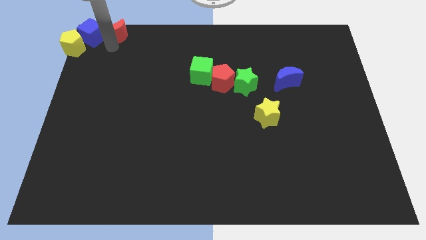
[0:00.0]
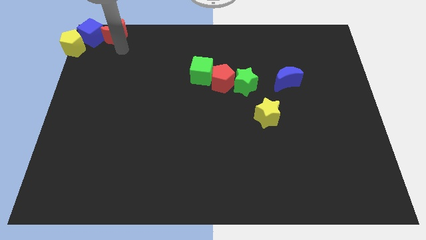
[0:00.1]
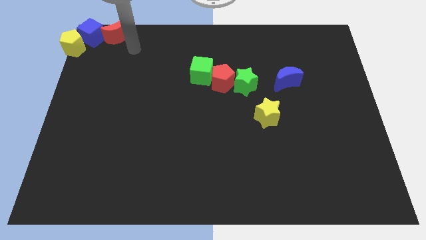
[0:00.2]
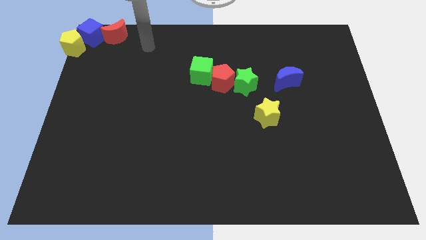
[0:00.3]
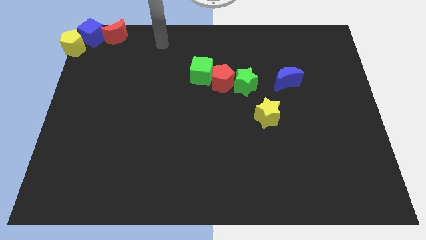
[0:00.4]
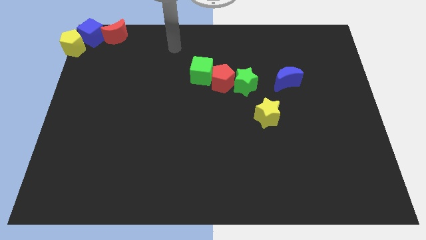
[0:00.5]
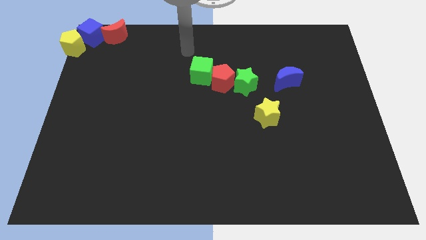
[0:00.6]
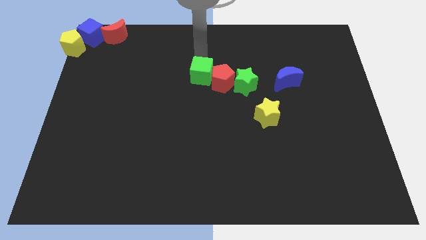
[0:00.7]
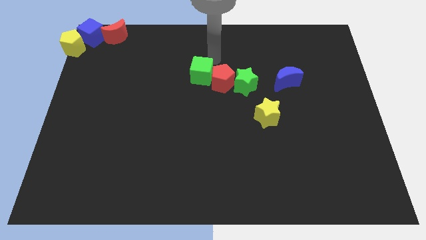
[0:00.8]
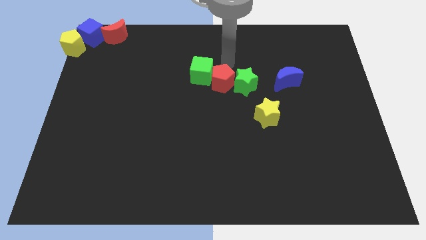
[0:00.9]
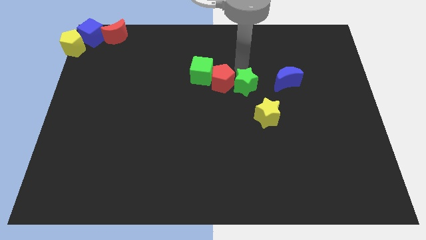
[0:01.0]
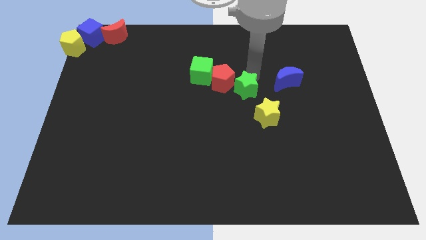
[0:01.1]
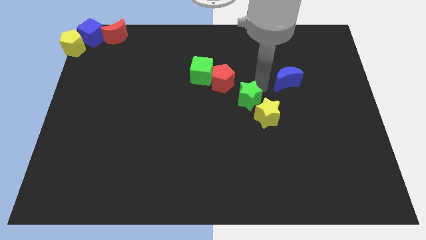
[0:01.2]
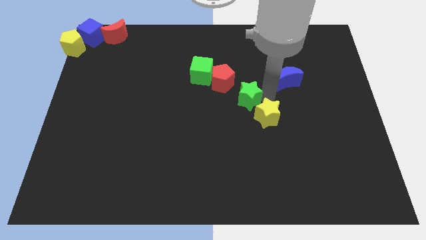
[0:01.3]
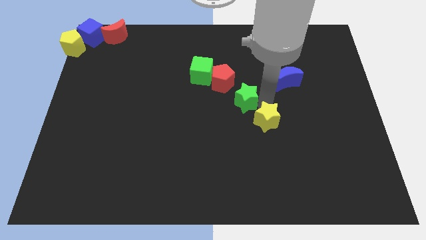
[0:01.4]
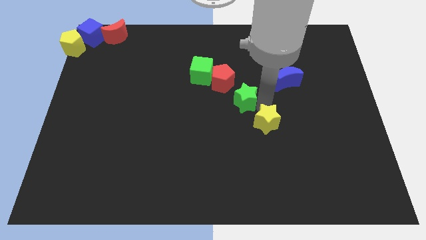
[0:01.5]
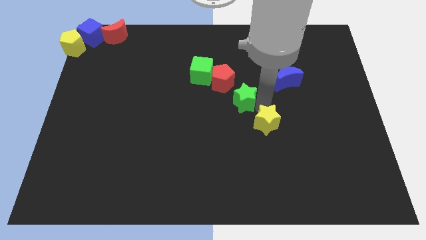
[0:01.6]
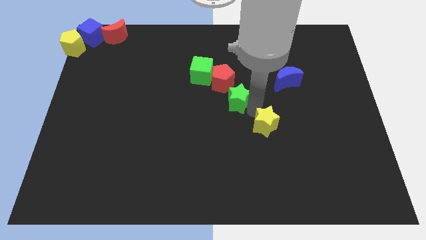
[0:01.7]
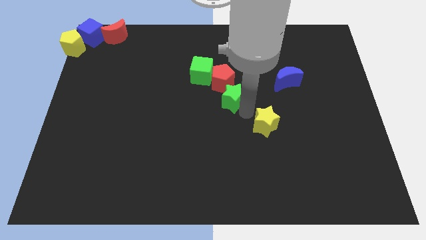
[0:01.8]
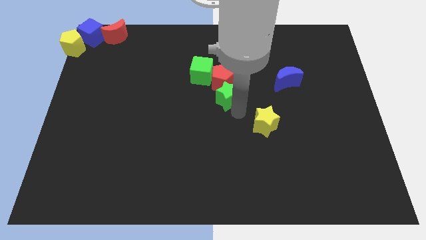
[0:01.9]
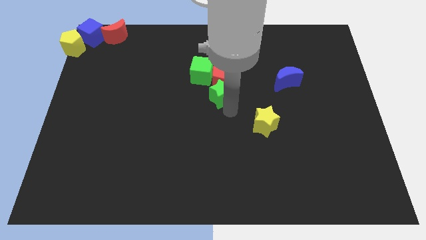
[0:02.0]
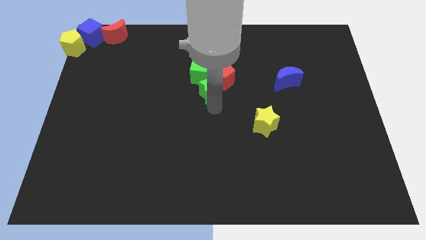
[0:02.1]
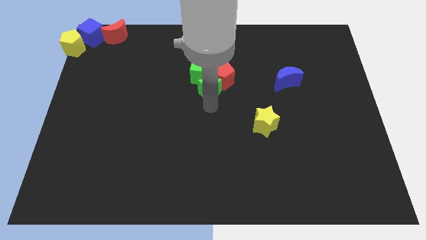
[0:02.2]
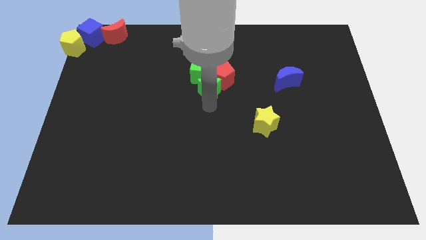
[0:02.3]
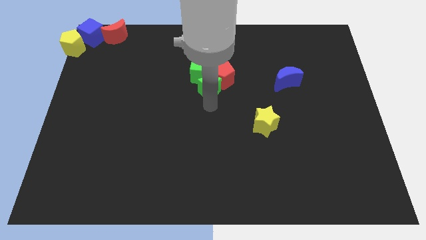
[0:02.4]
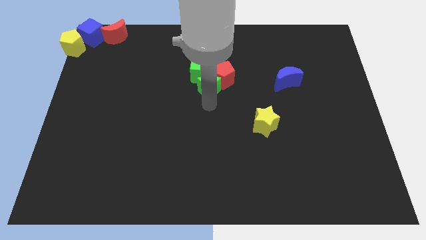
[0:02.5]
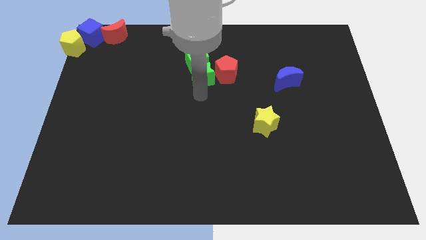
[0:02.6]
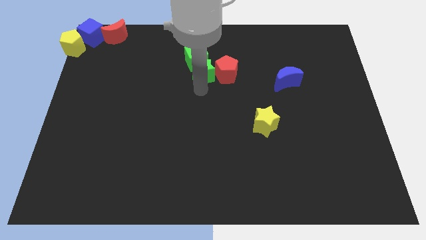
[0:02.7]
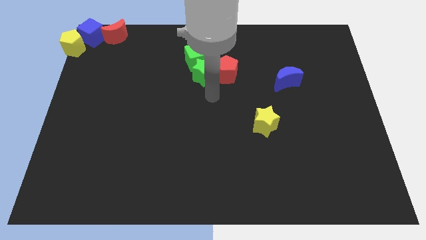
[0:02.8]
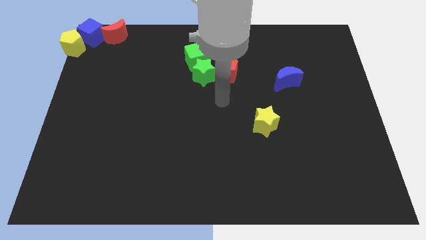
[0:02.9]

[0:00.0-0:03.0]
push the green star into the green cube

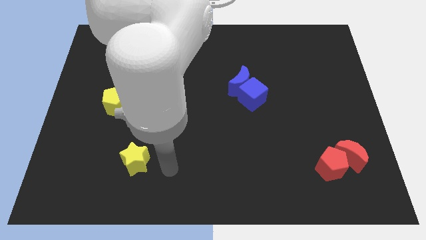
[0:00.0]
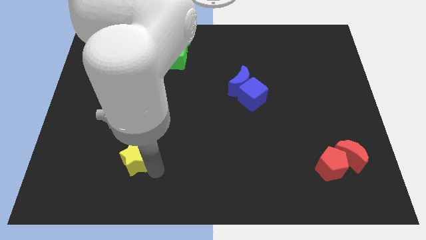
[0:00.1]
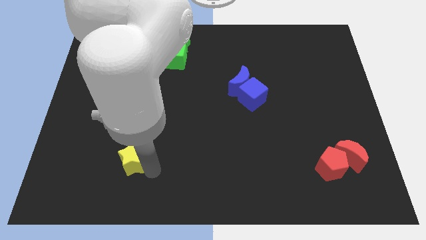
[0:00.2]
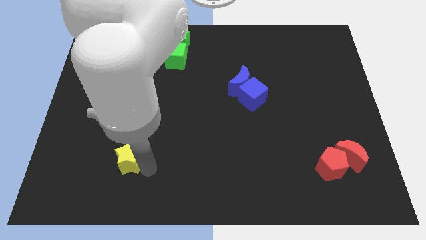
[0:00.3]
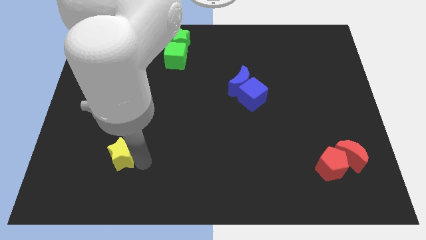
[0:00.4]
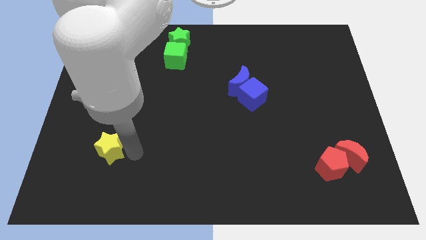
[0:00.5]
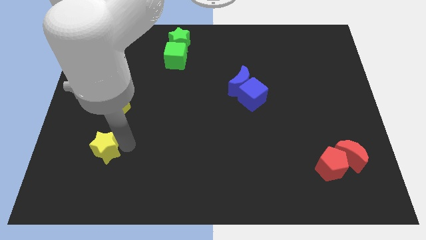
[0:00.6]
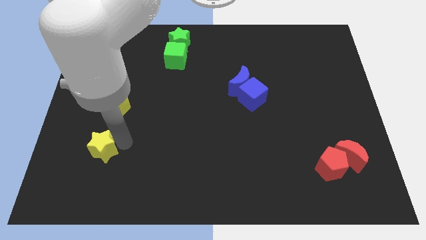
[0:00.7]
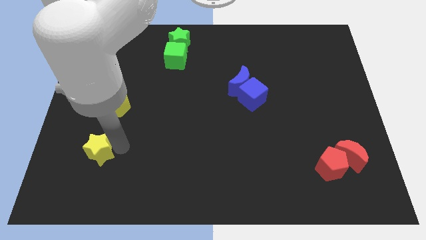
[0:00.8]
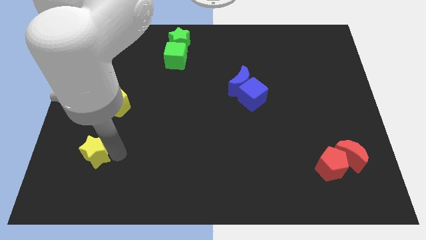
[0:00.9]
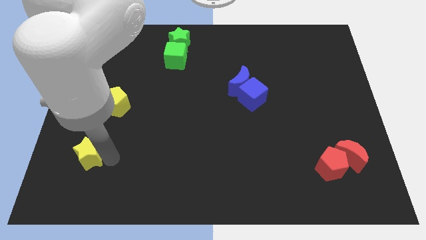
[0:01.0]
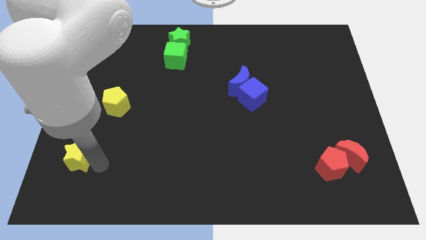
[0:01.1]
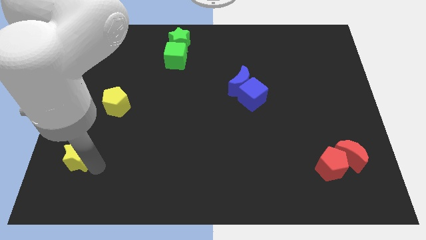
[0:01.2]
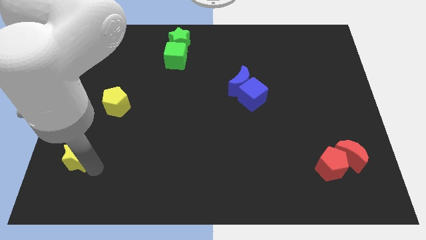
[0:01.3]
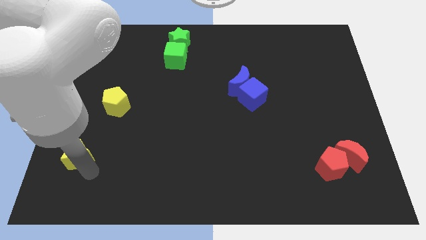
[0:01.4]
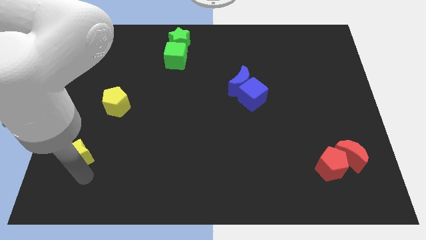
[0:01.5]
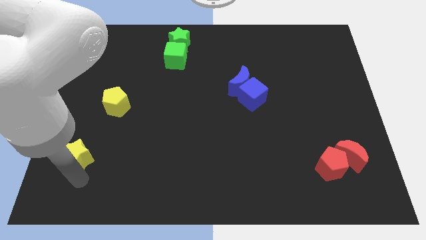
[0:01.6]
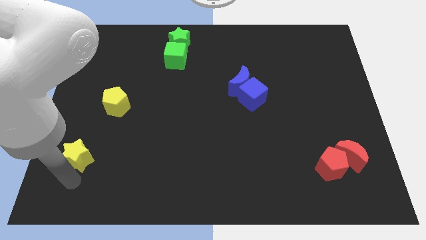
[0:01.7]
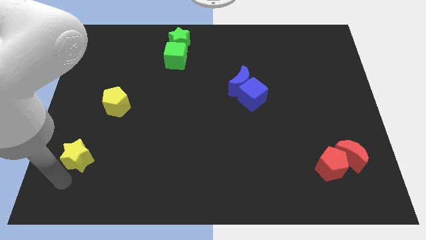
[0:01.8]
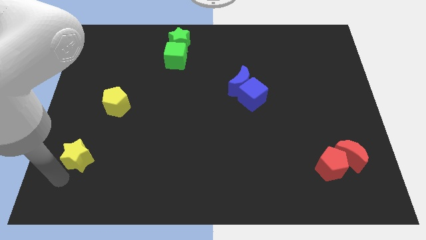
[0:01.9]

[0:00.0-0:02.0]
move the yellow star towards left side

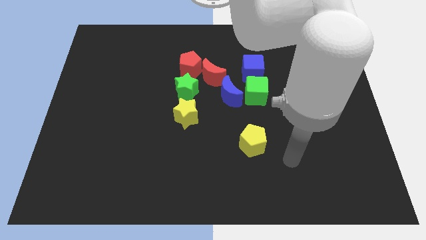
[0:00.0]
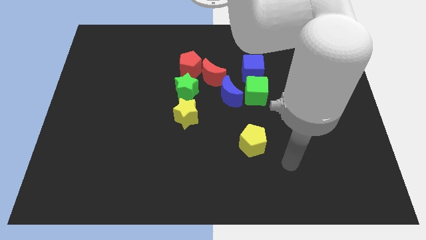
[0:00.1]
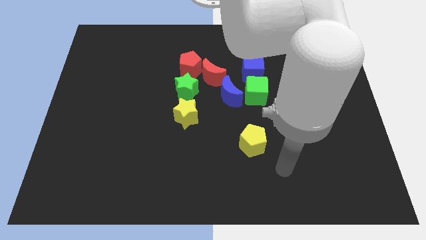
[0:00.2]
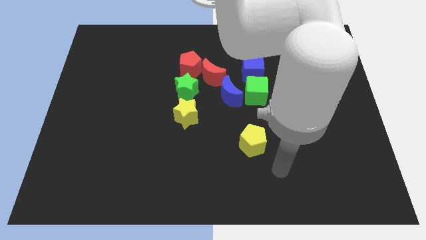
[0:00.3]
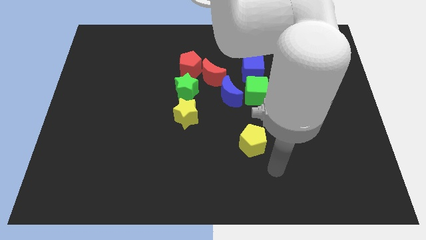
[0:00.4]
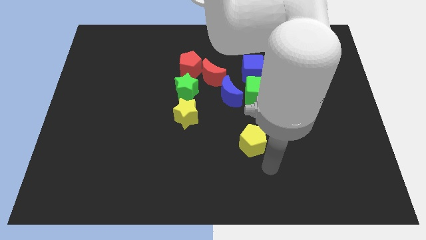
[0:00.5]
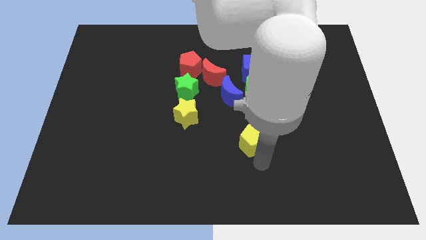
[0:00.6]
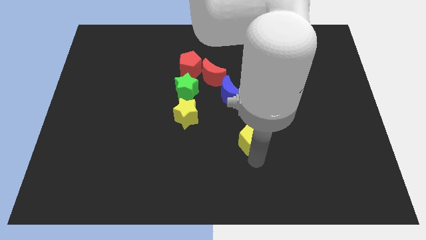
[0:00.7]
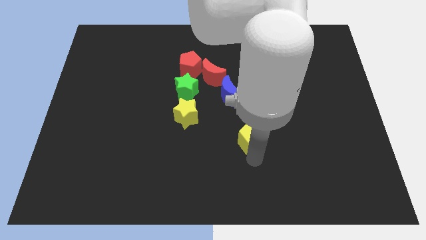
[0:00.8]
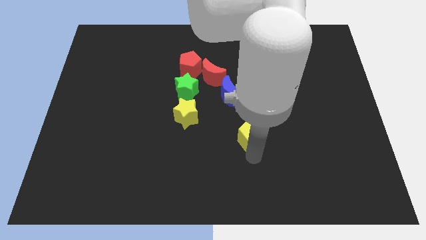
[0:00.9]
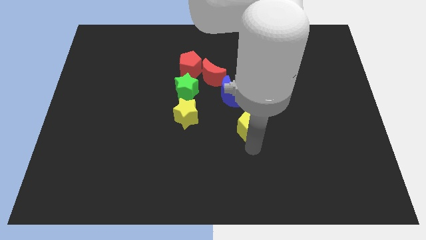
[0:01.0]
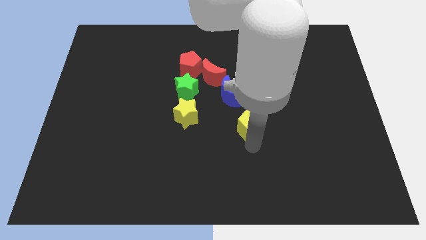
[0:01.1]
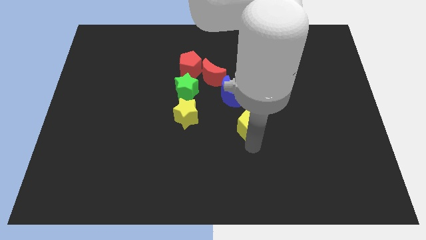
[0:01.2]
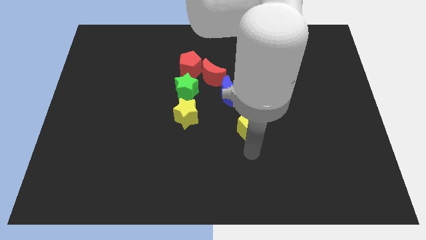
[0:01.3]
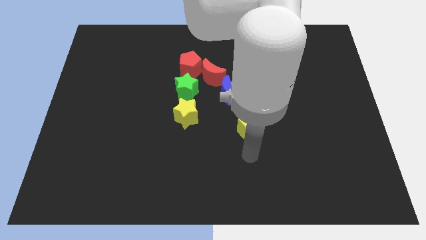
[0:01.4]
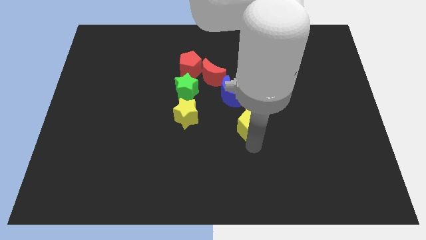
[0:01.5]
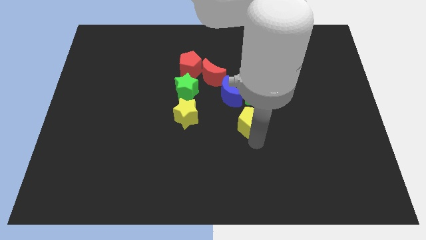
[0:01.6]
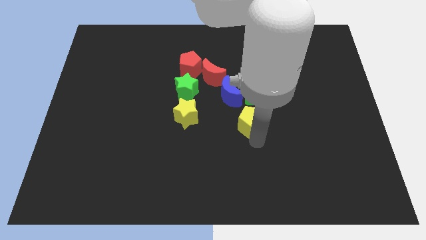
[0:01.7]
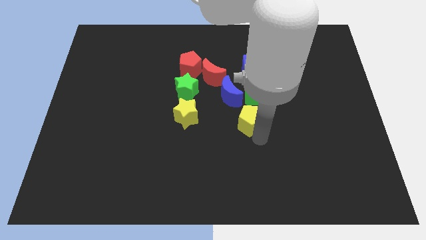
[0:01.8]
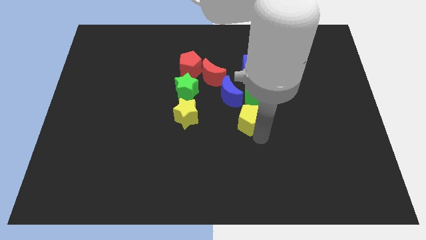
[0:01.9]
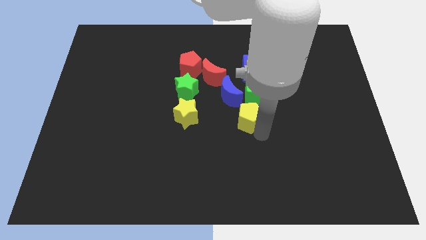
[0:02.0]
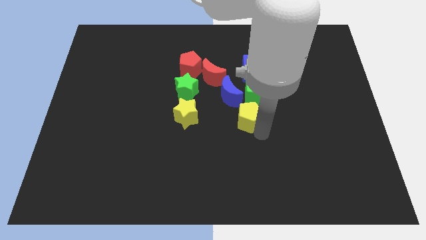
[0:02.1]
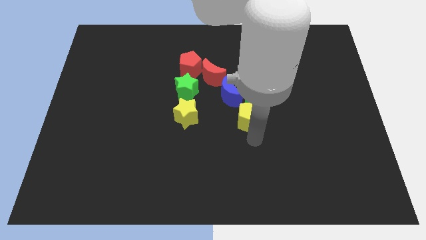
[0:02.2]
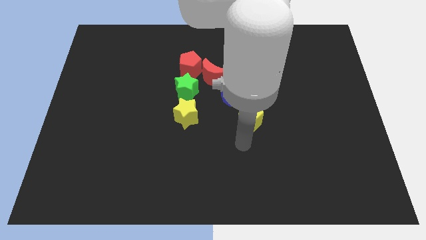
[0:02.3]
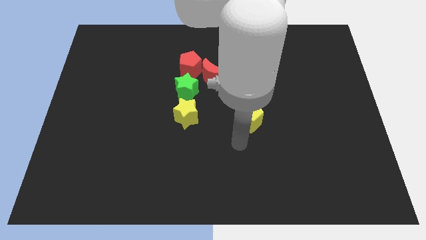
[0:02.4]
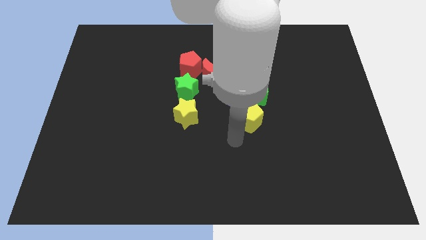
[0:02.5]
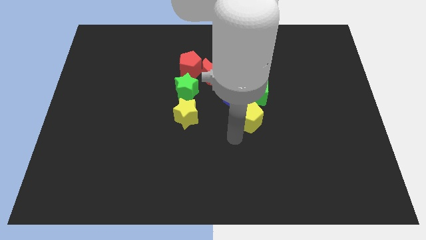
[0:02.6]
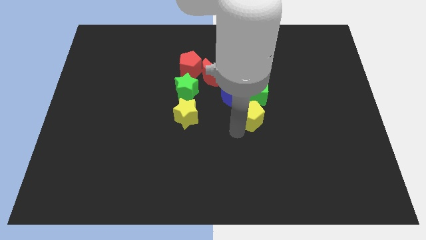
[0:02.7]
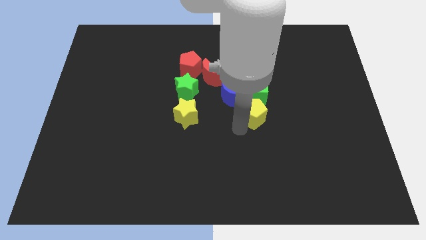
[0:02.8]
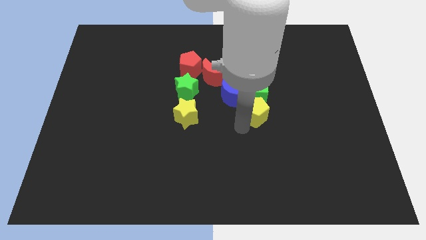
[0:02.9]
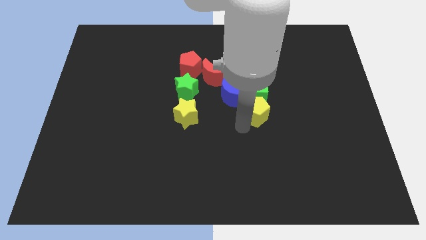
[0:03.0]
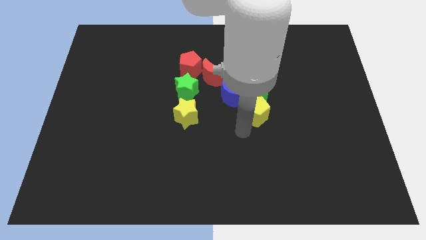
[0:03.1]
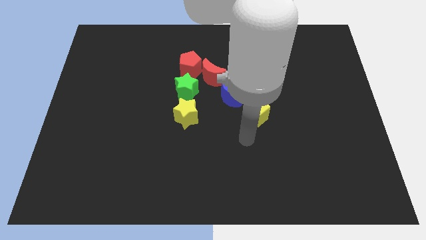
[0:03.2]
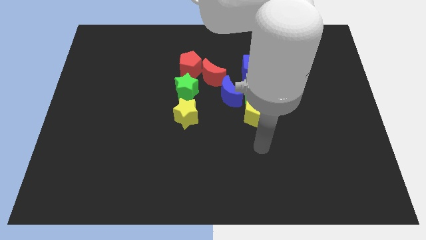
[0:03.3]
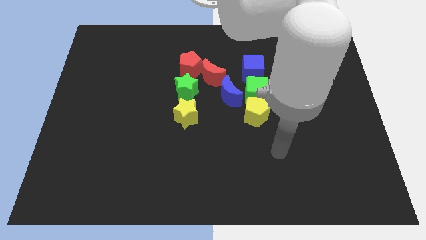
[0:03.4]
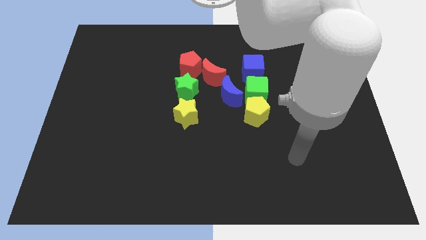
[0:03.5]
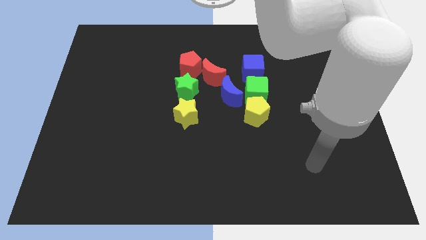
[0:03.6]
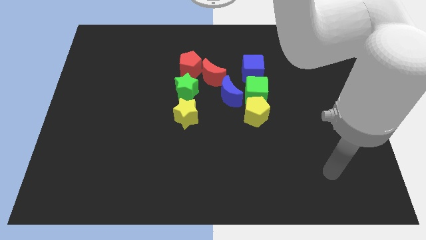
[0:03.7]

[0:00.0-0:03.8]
put the yellow pentagon parallel to the yellow star
